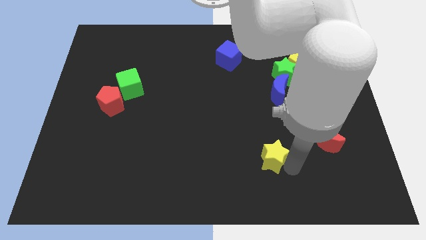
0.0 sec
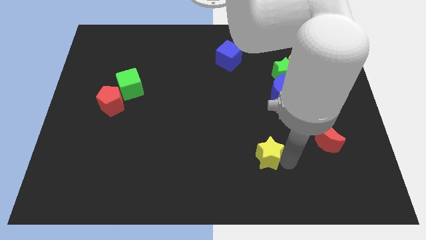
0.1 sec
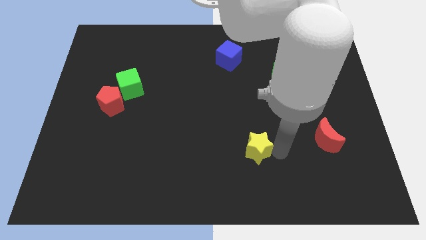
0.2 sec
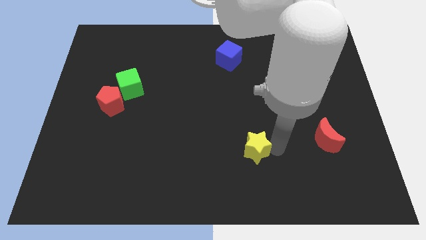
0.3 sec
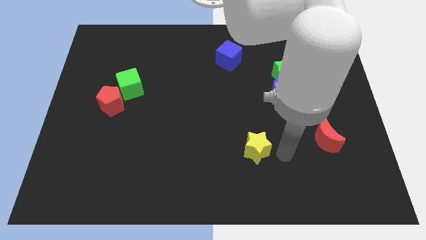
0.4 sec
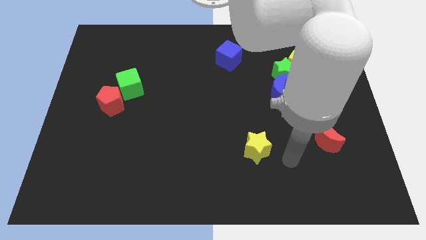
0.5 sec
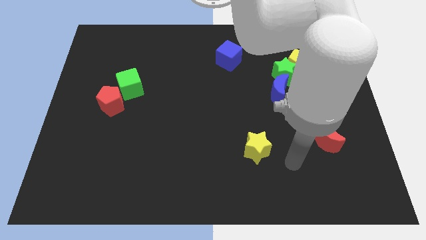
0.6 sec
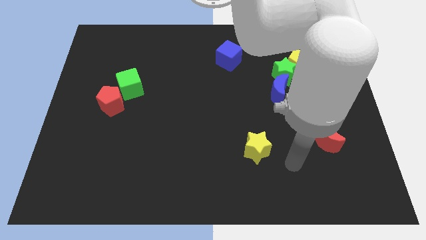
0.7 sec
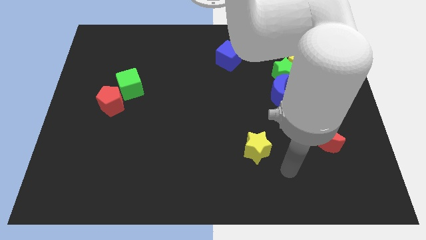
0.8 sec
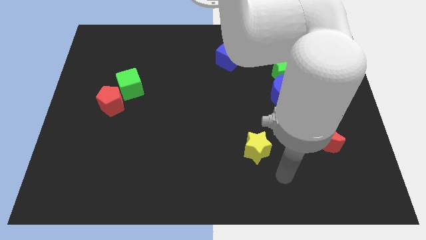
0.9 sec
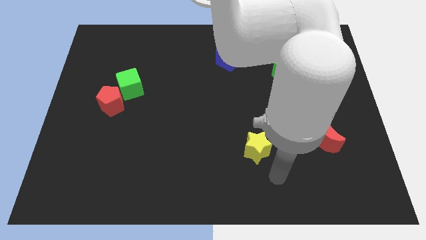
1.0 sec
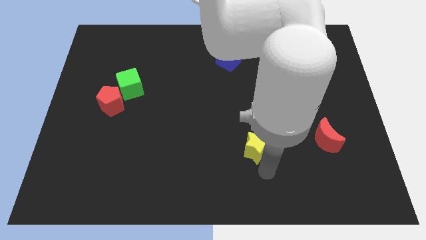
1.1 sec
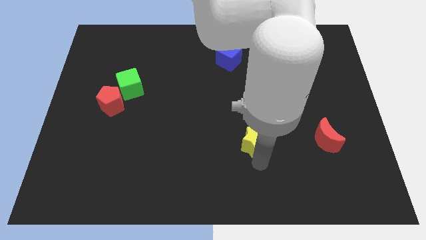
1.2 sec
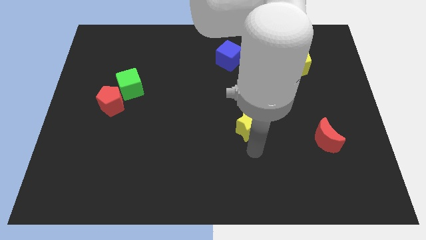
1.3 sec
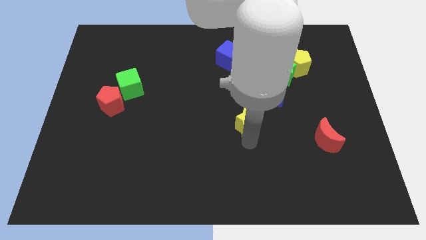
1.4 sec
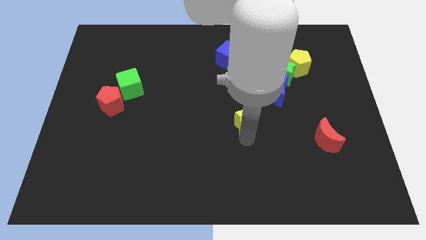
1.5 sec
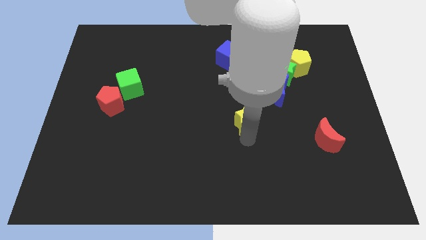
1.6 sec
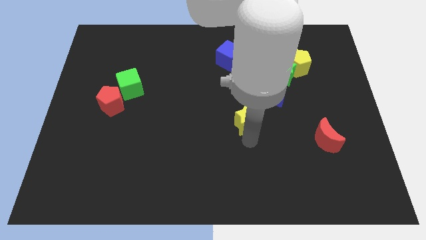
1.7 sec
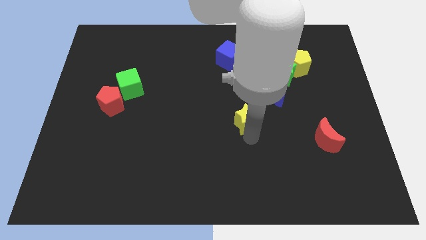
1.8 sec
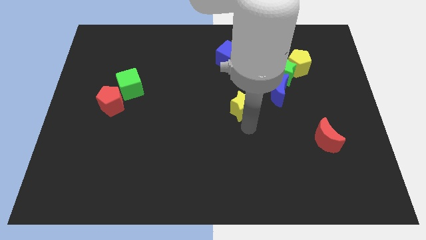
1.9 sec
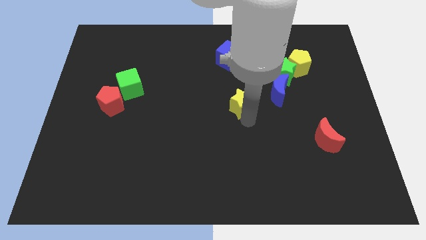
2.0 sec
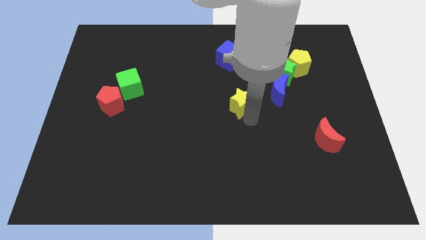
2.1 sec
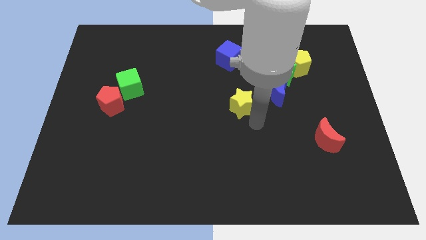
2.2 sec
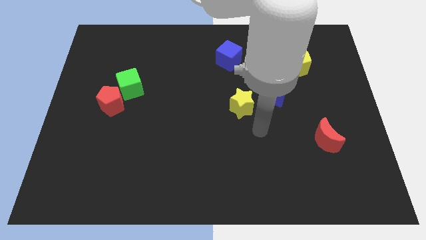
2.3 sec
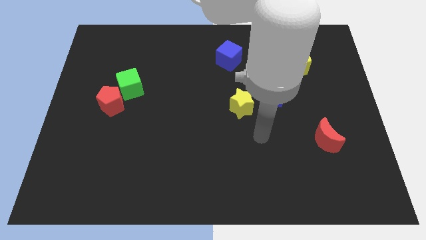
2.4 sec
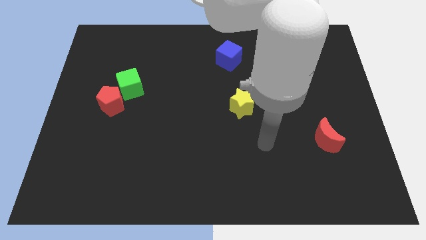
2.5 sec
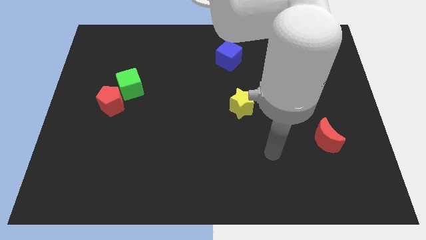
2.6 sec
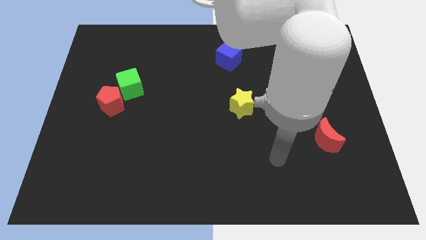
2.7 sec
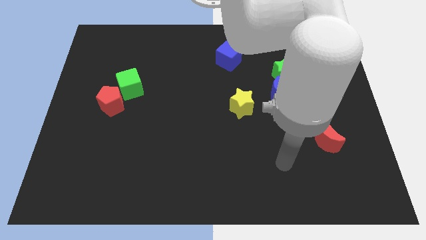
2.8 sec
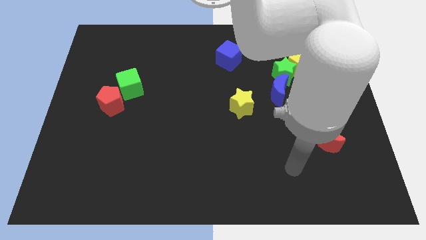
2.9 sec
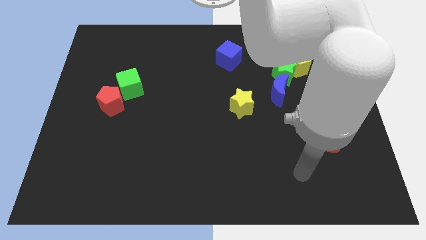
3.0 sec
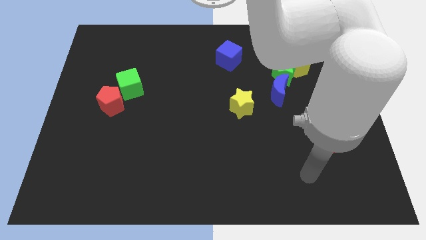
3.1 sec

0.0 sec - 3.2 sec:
push the yellow star towards the center of the board

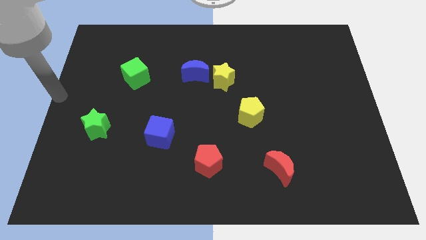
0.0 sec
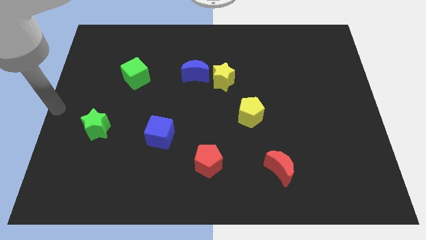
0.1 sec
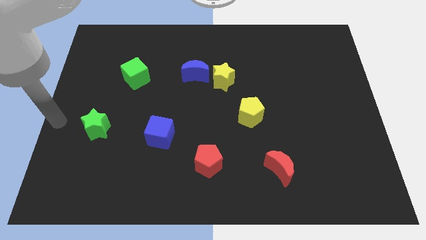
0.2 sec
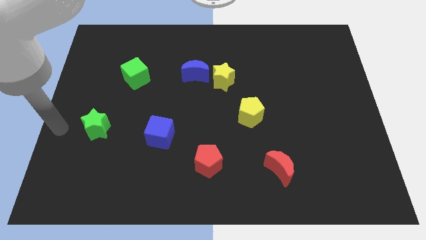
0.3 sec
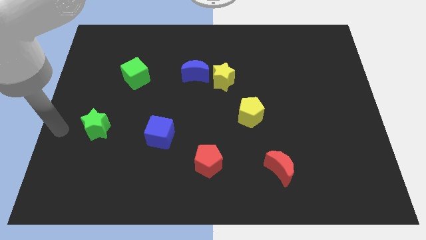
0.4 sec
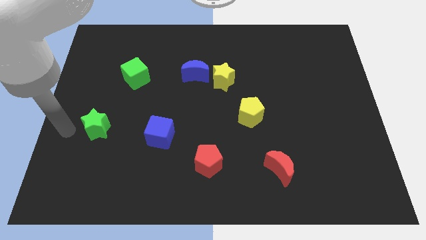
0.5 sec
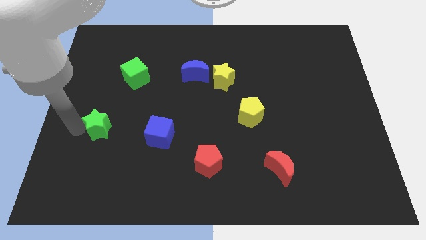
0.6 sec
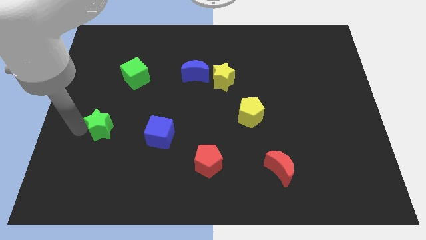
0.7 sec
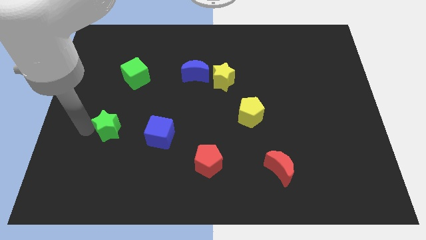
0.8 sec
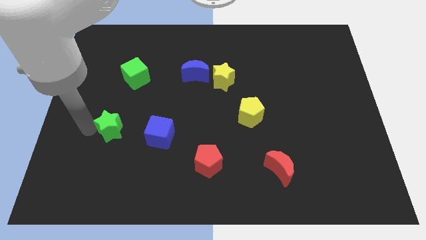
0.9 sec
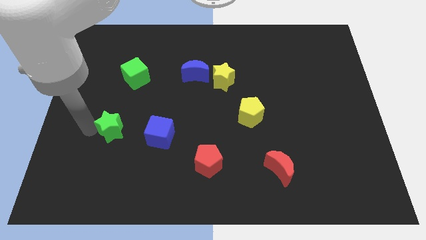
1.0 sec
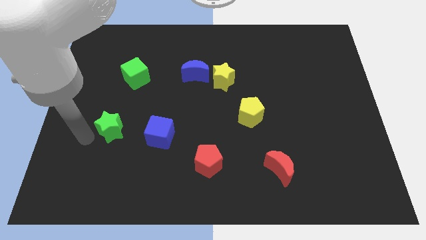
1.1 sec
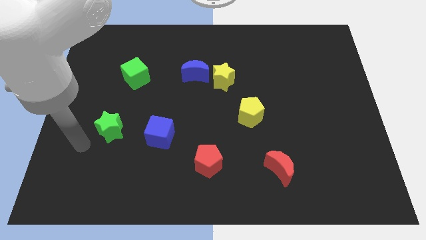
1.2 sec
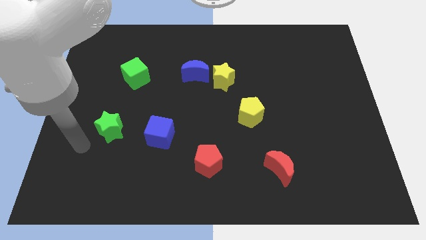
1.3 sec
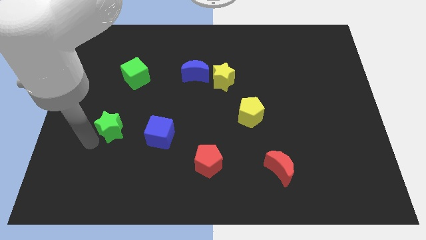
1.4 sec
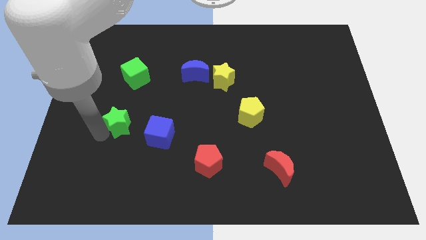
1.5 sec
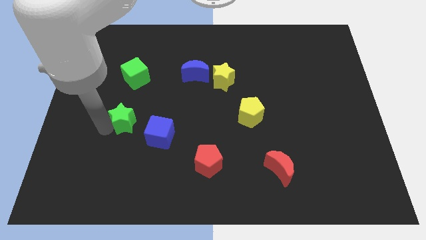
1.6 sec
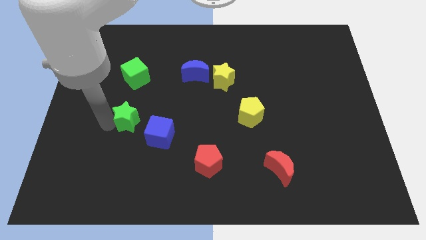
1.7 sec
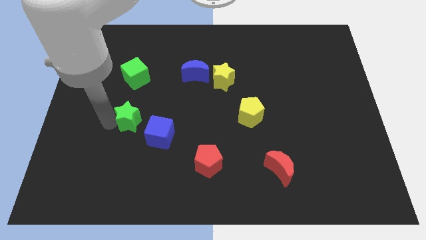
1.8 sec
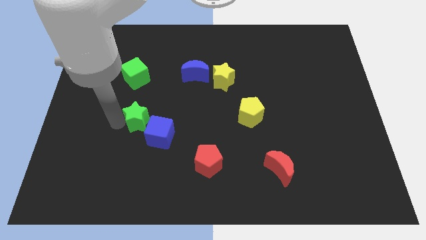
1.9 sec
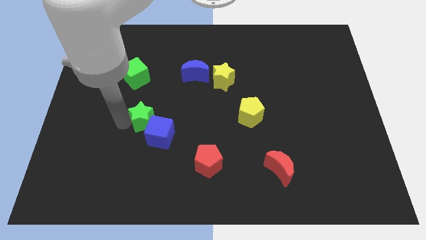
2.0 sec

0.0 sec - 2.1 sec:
push the green star into the blue cube

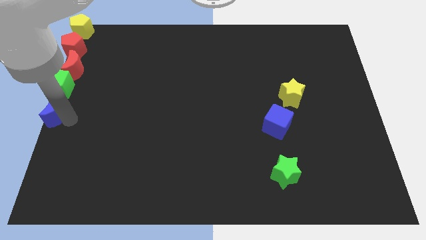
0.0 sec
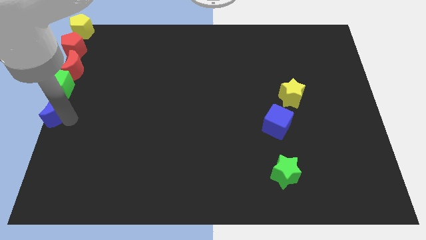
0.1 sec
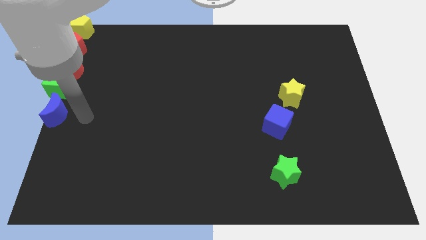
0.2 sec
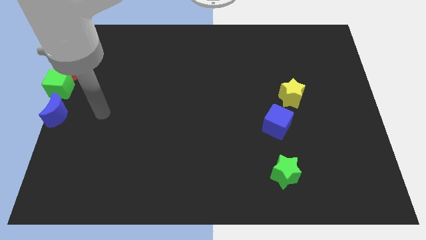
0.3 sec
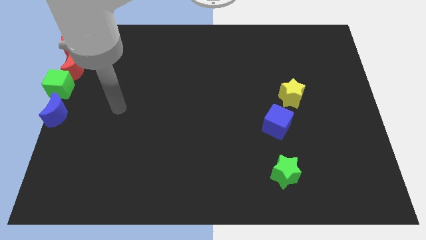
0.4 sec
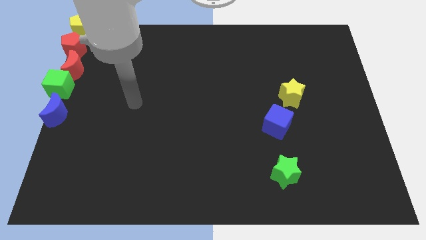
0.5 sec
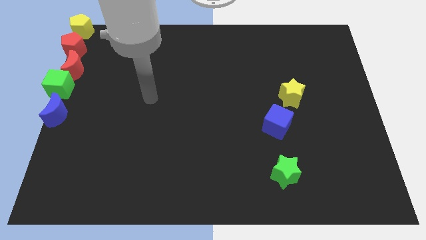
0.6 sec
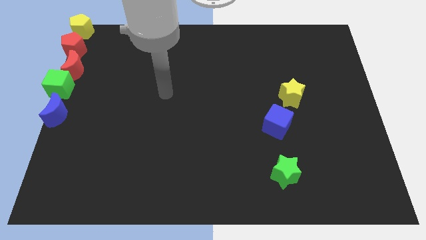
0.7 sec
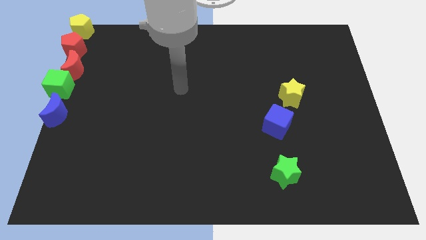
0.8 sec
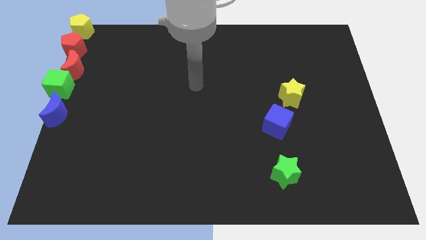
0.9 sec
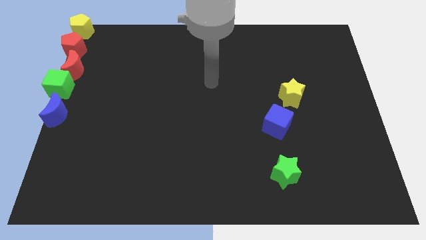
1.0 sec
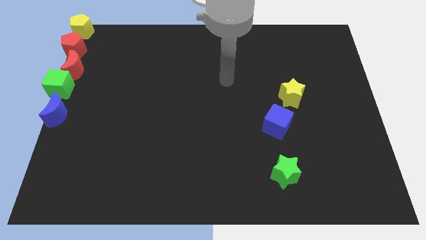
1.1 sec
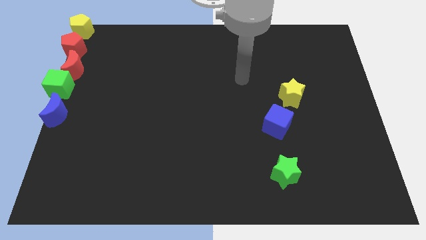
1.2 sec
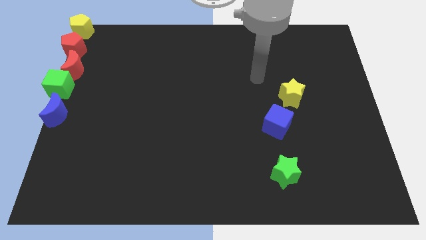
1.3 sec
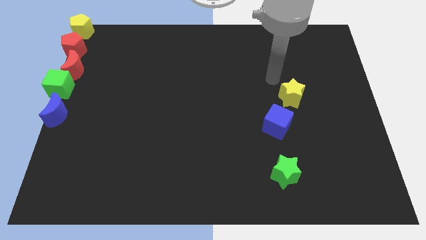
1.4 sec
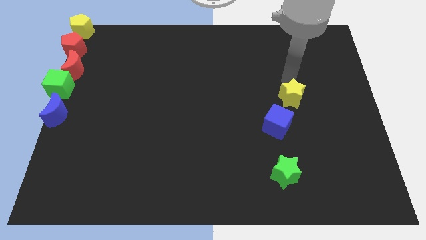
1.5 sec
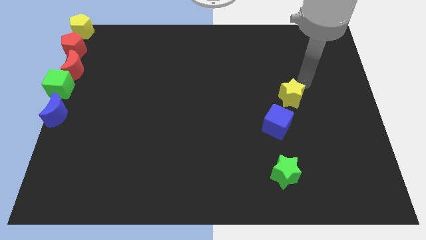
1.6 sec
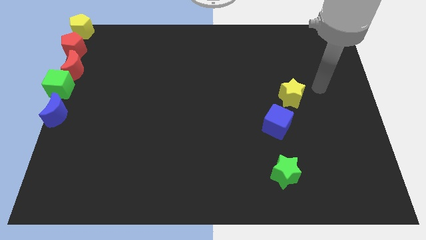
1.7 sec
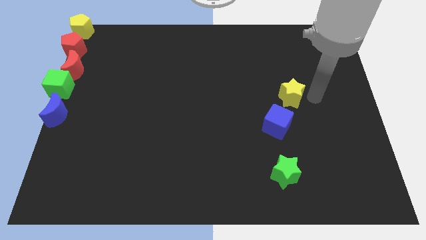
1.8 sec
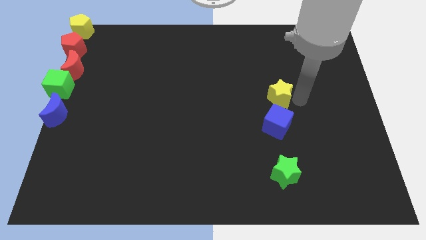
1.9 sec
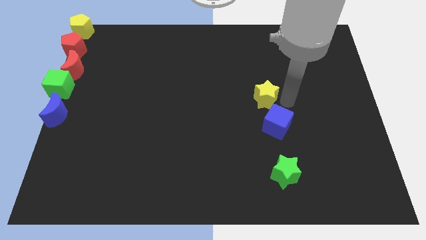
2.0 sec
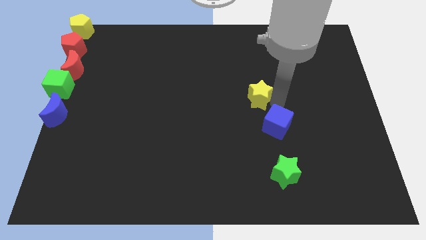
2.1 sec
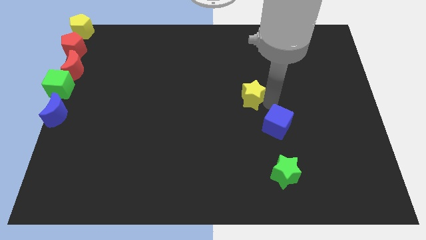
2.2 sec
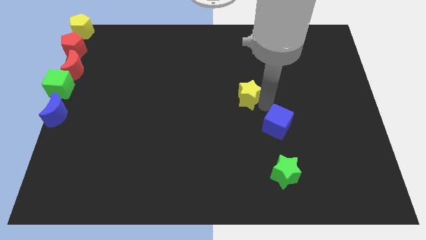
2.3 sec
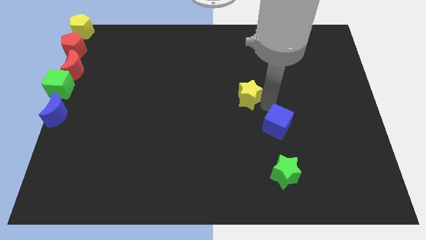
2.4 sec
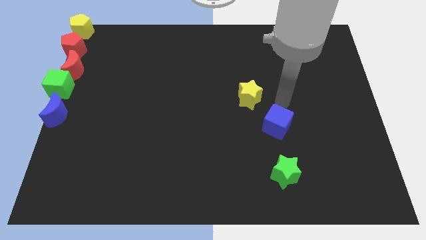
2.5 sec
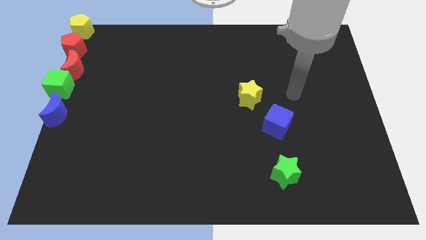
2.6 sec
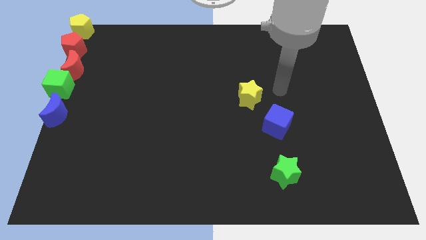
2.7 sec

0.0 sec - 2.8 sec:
move the yellow star to the top left of the blue cube

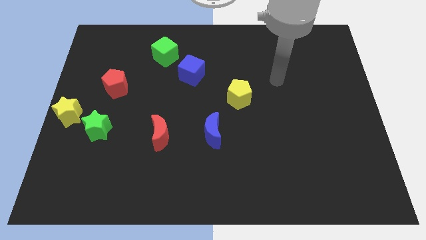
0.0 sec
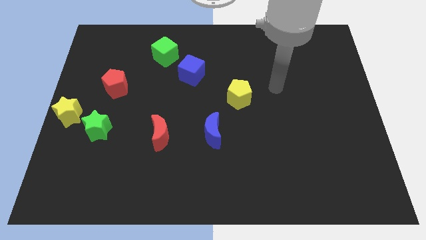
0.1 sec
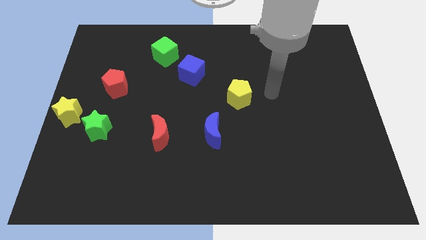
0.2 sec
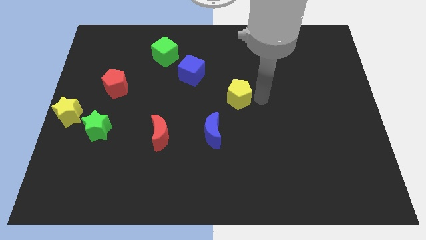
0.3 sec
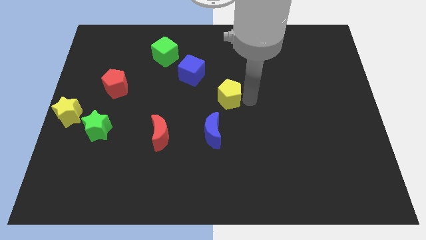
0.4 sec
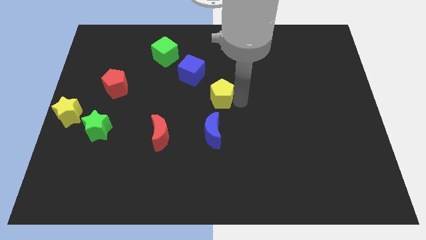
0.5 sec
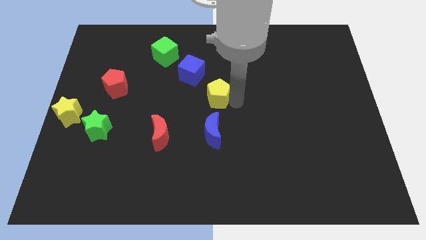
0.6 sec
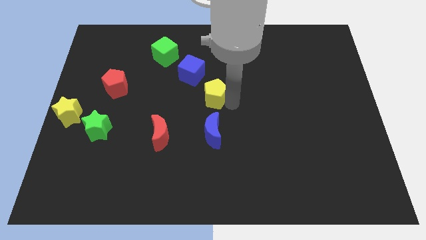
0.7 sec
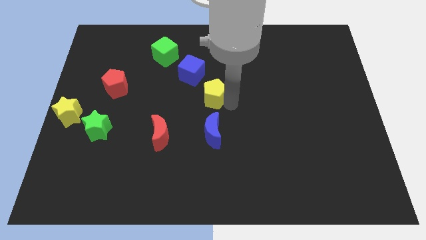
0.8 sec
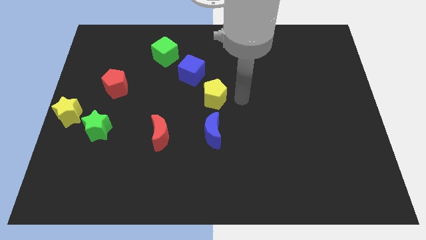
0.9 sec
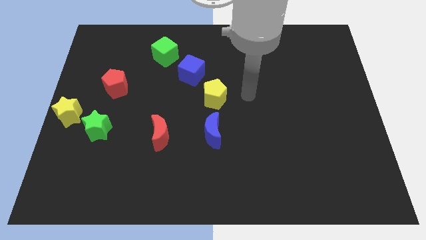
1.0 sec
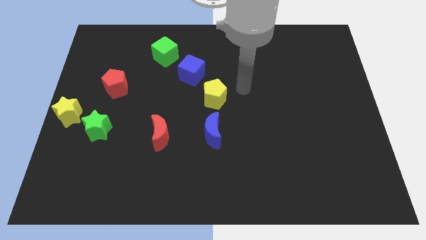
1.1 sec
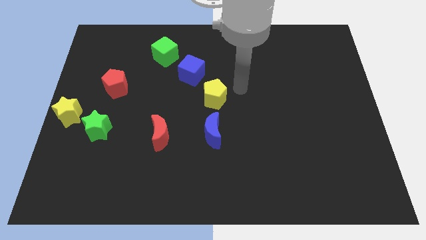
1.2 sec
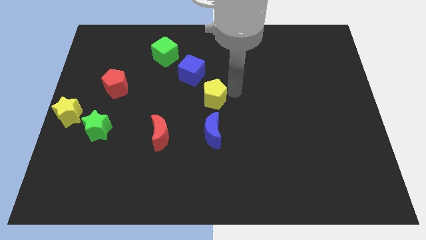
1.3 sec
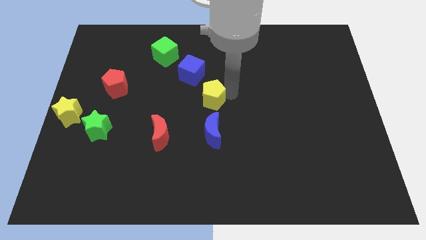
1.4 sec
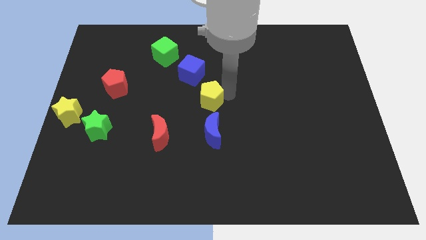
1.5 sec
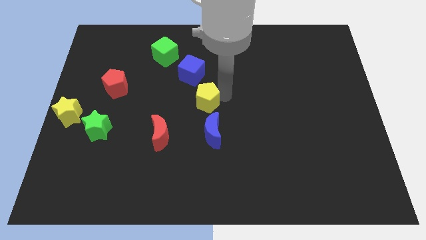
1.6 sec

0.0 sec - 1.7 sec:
place the yellow pentagon in between the blue cube and blue moon
